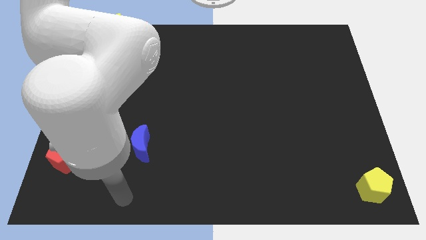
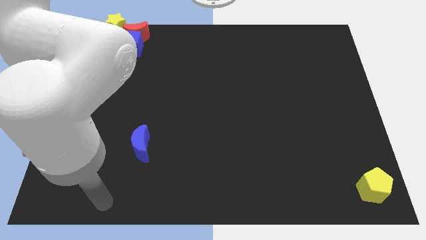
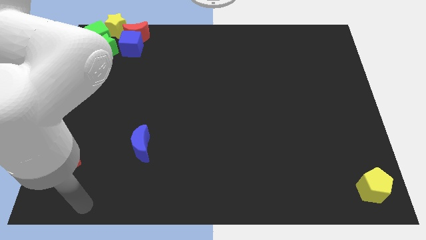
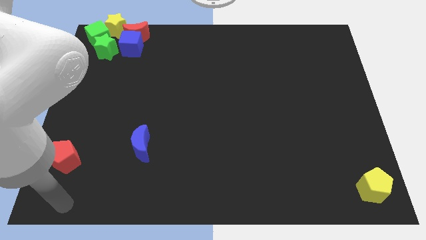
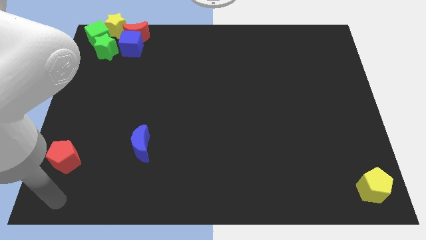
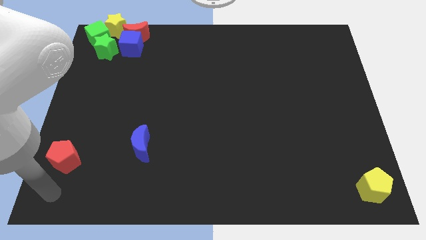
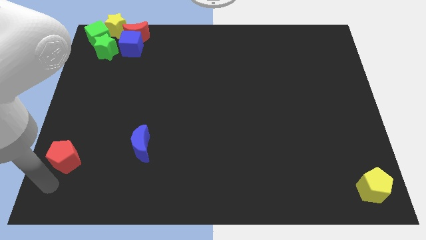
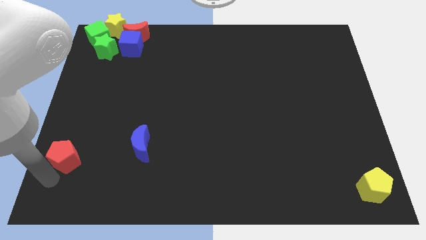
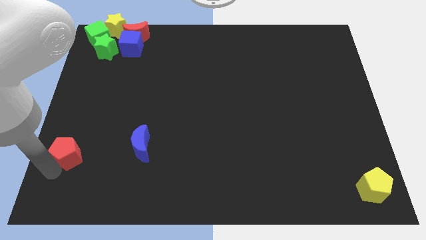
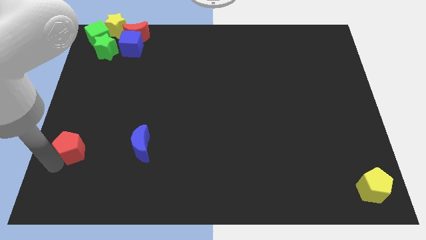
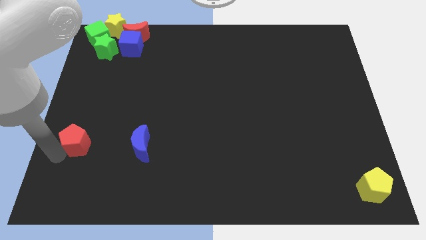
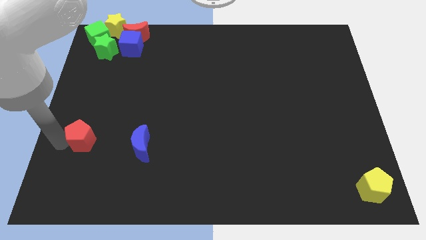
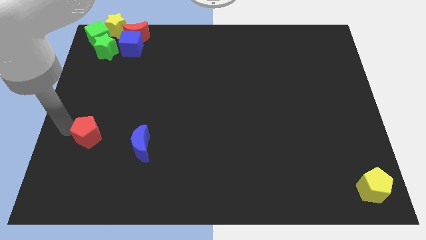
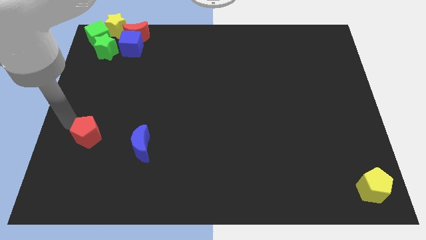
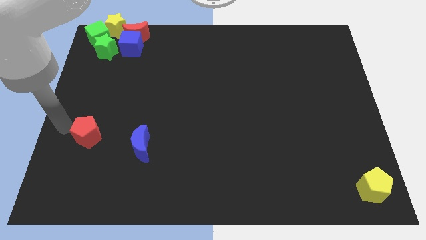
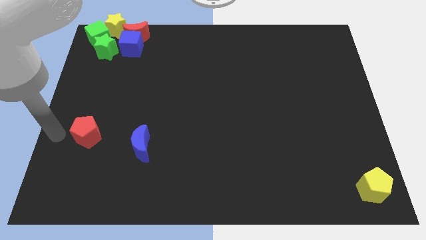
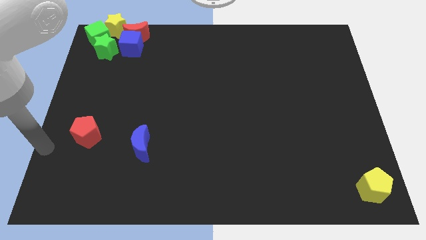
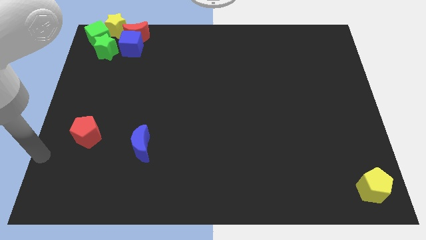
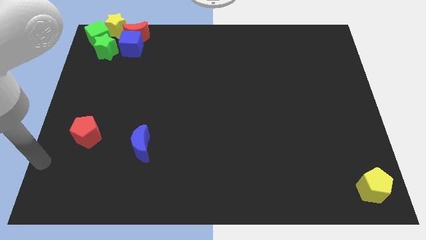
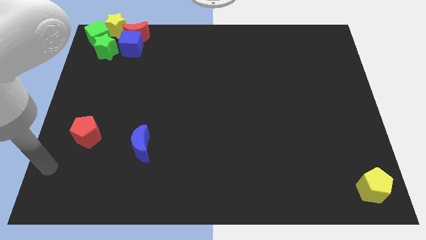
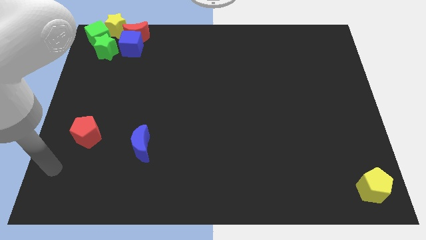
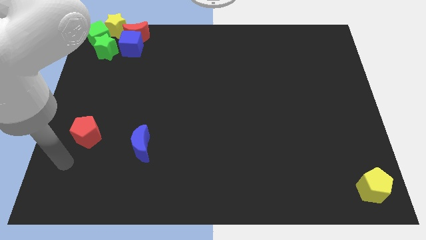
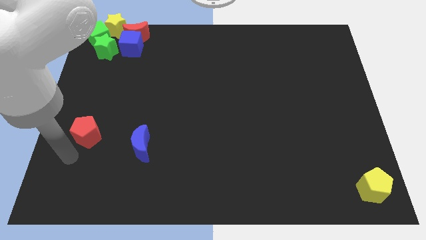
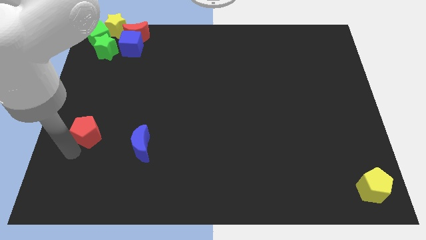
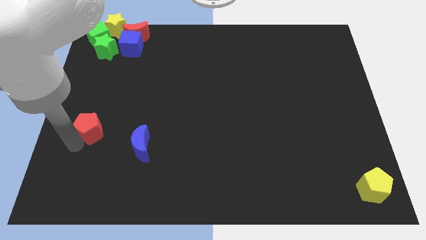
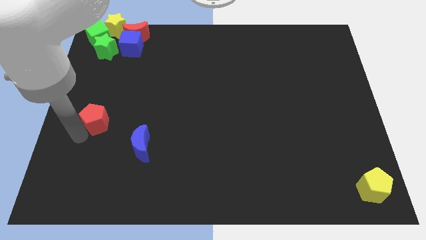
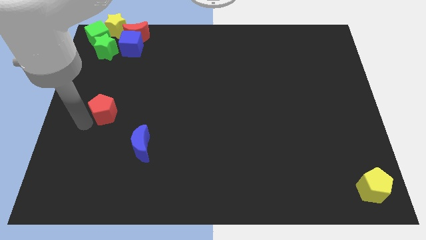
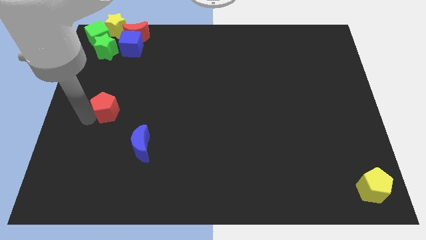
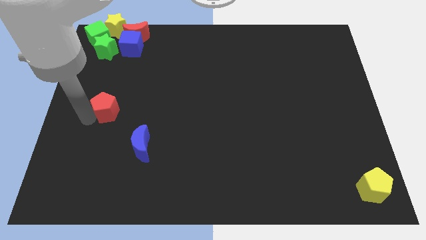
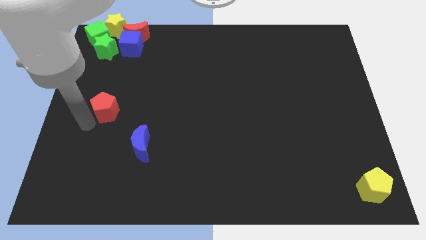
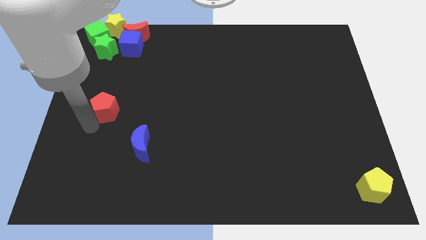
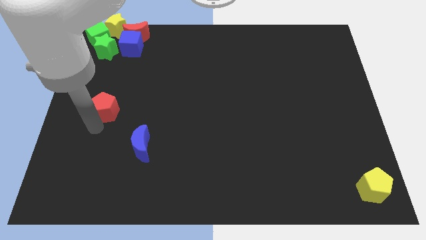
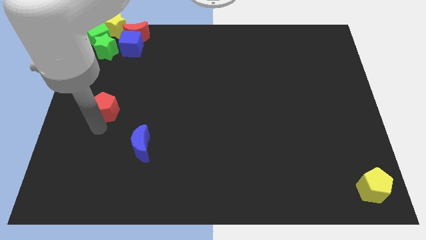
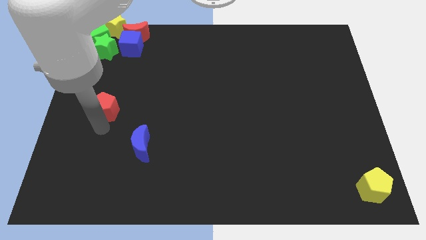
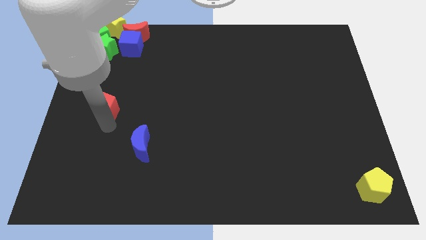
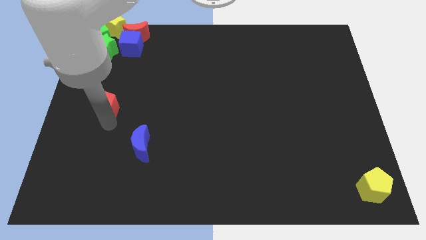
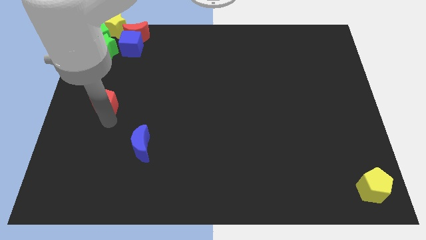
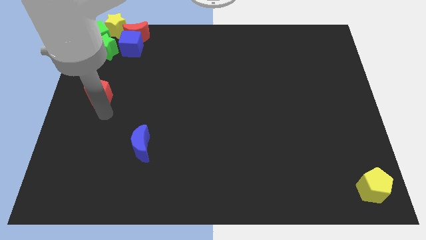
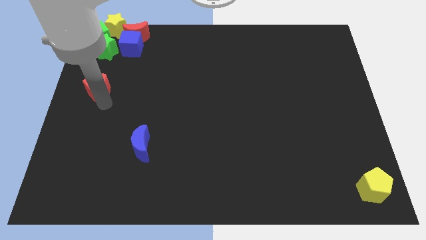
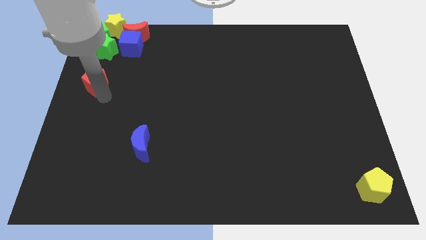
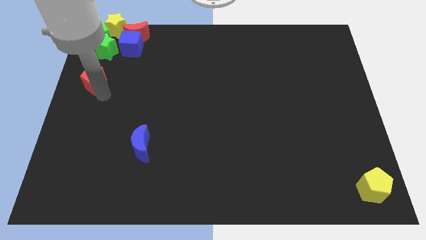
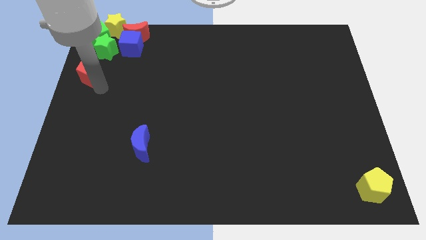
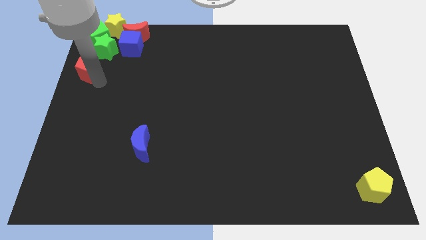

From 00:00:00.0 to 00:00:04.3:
push the red pentagon towards the top left corner of the board

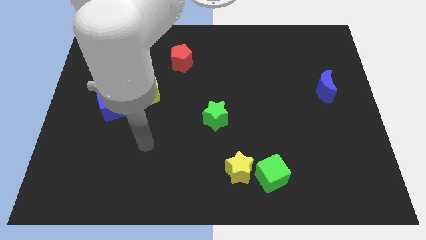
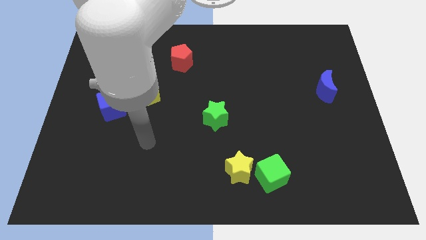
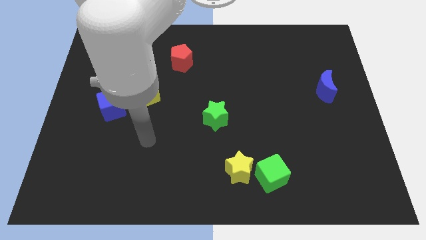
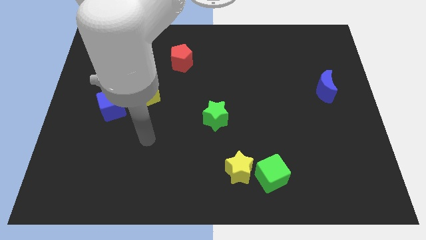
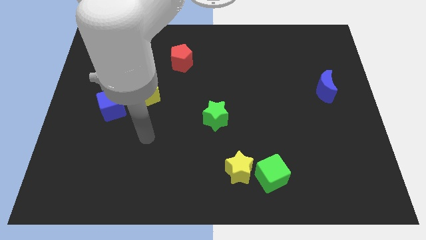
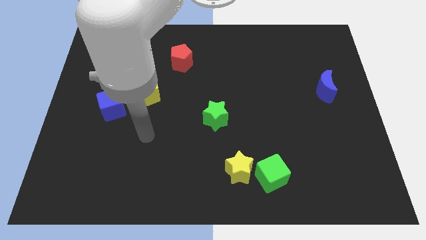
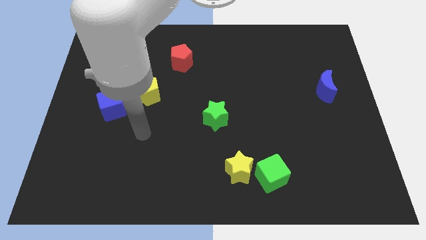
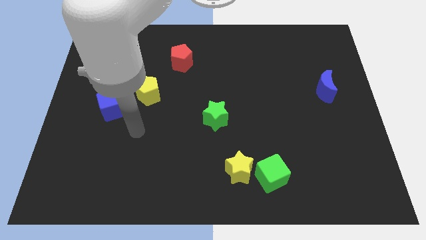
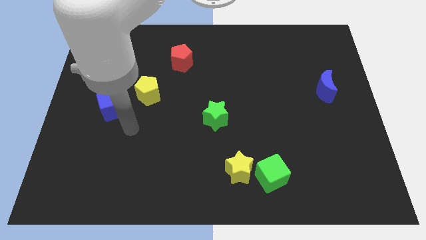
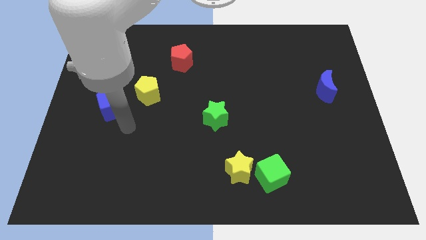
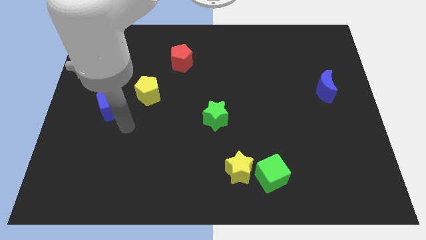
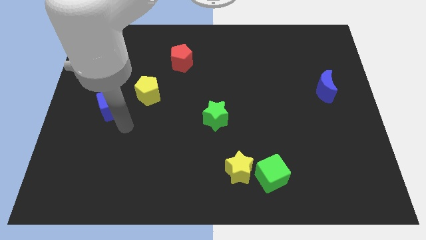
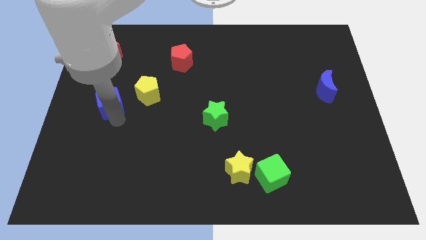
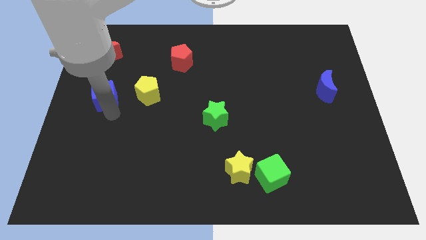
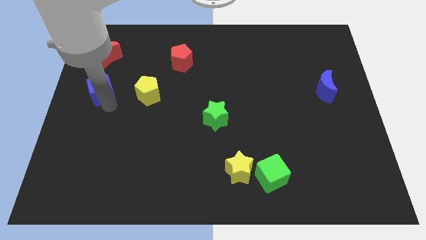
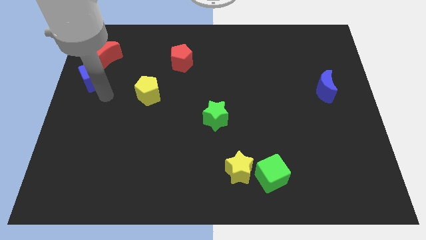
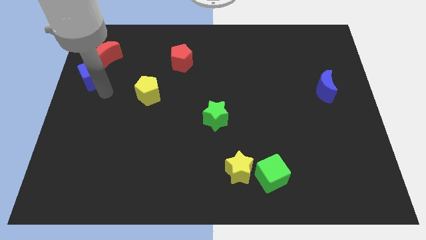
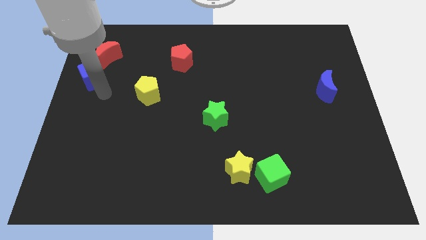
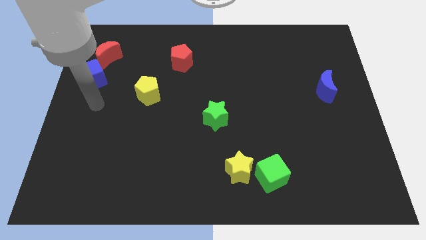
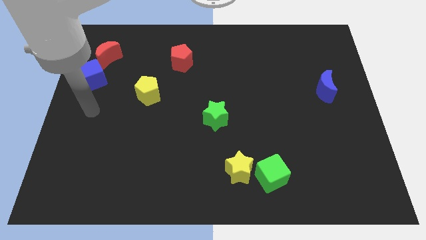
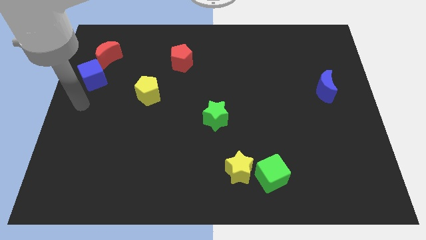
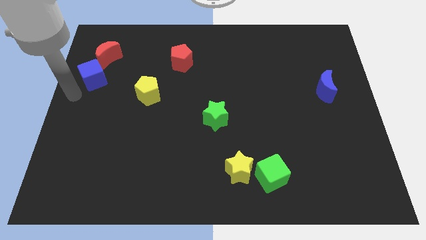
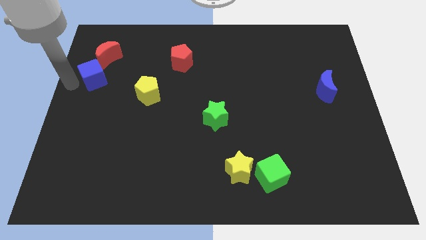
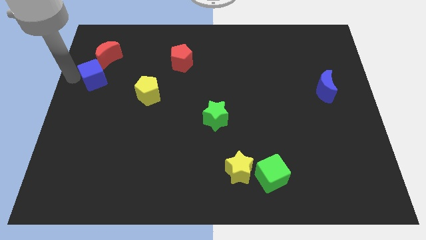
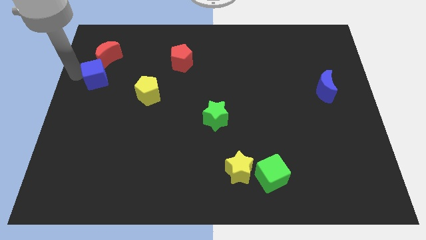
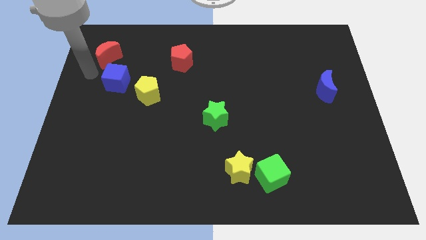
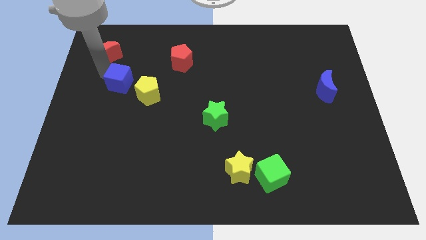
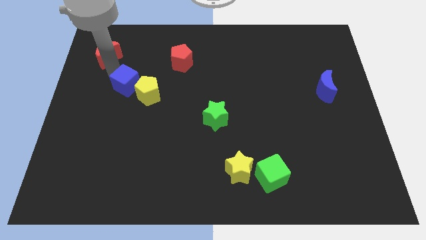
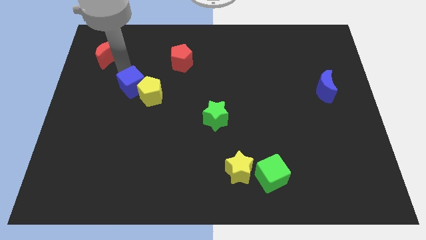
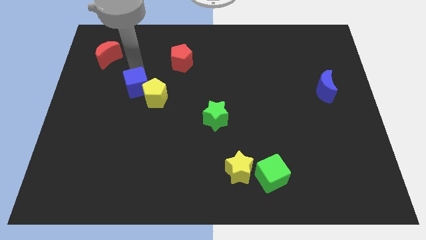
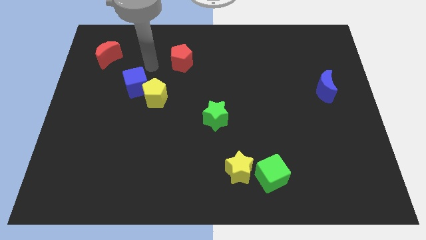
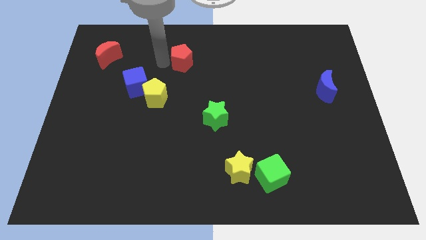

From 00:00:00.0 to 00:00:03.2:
push the blue cube into the top left side of the yellow pentagon

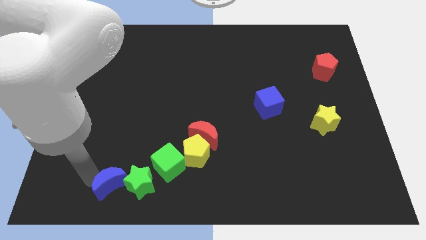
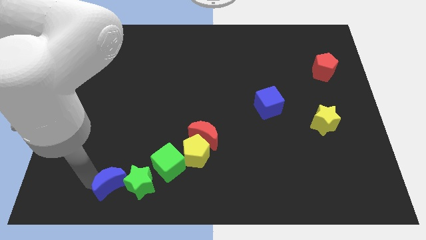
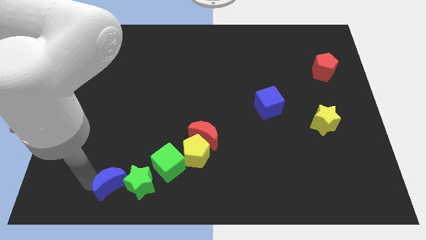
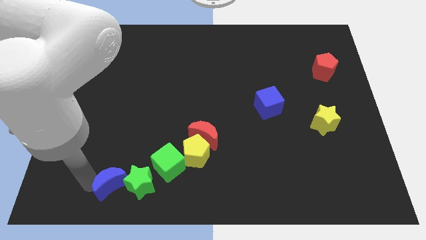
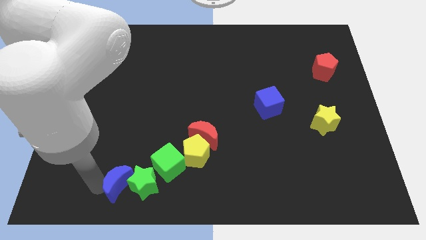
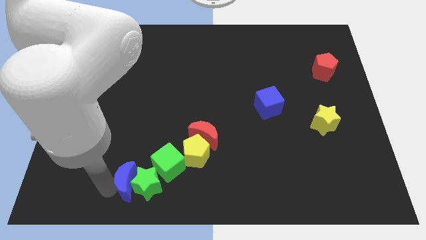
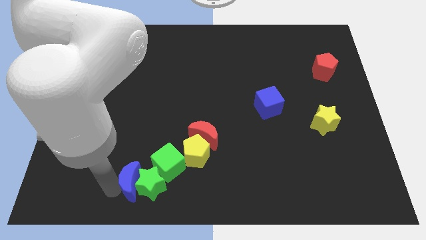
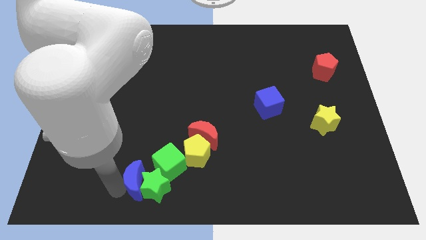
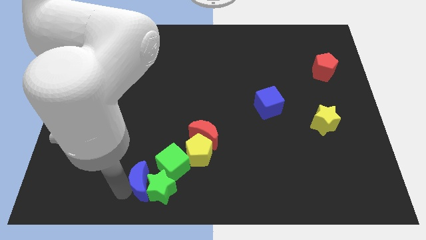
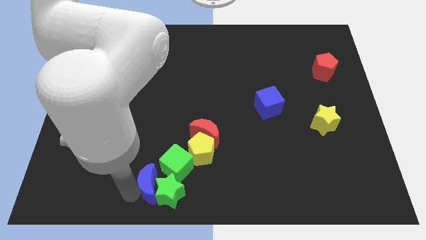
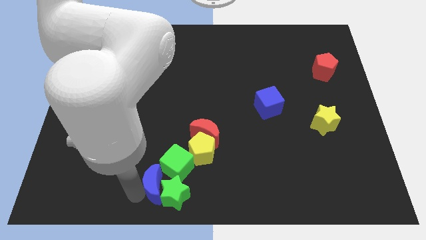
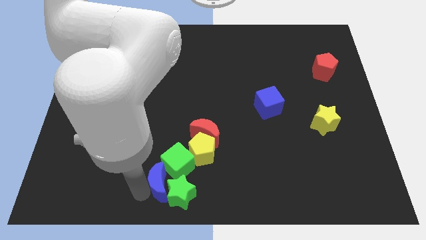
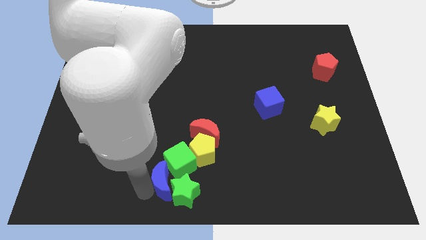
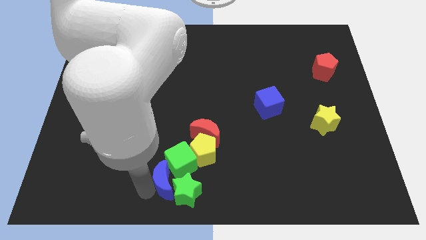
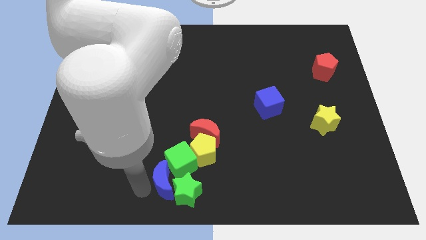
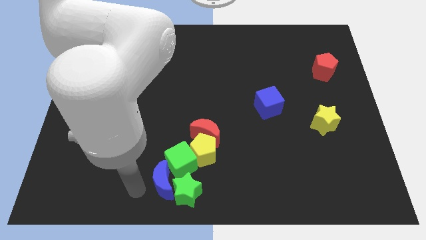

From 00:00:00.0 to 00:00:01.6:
push the blue crescent into the group of blocks
